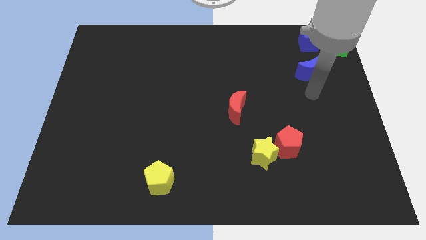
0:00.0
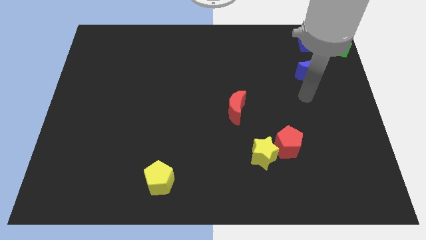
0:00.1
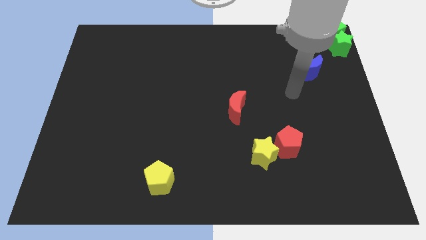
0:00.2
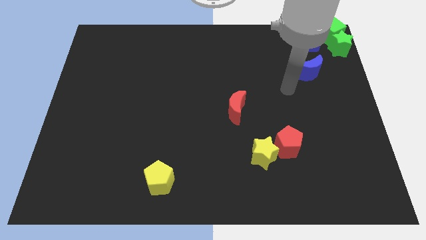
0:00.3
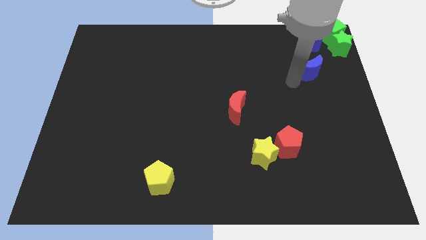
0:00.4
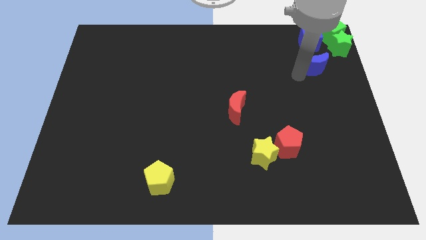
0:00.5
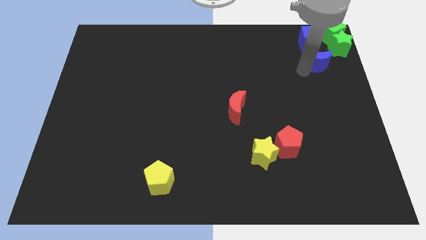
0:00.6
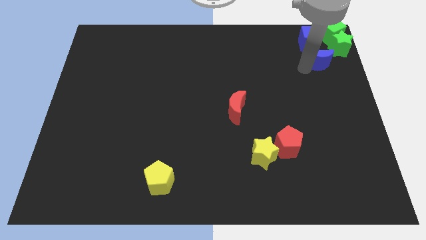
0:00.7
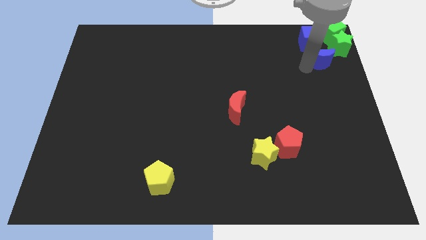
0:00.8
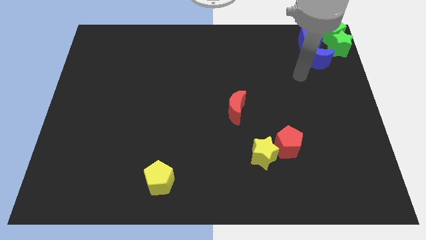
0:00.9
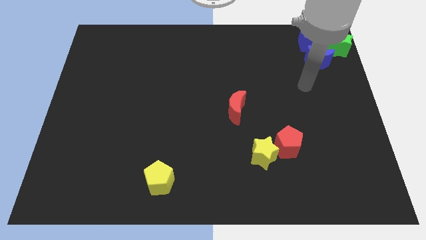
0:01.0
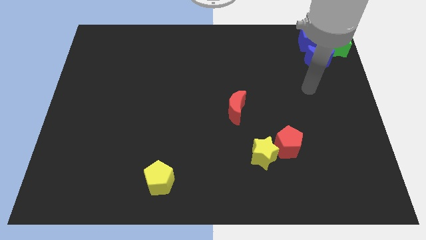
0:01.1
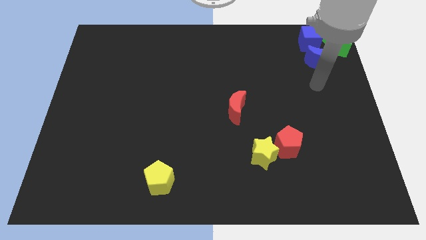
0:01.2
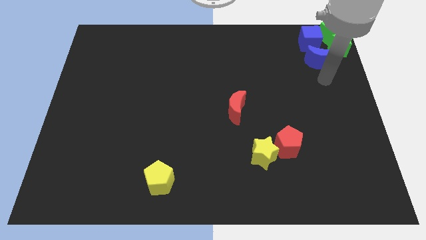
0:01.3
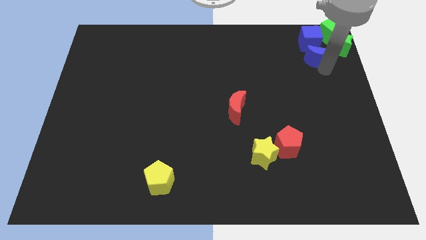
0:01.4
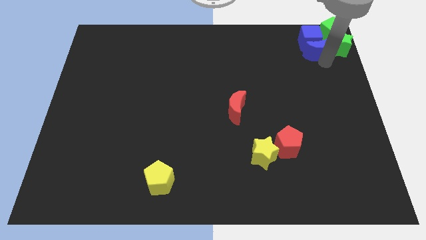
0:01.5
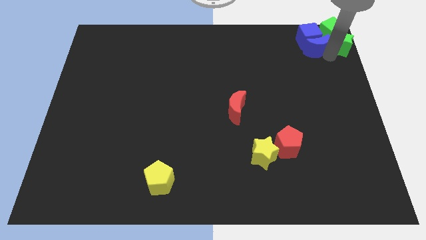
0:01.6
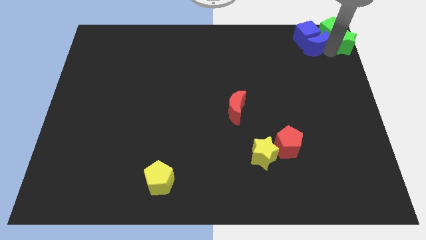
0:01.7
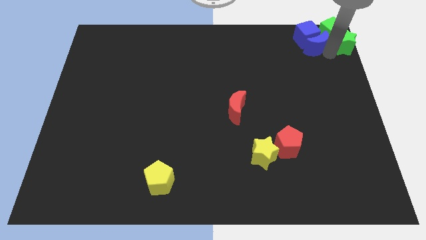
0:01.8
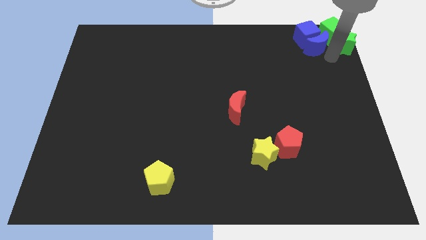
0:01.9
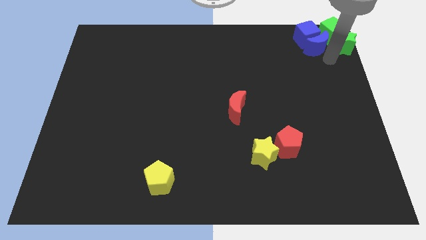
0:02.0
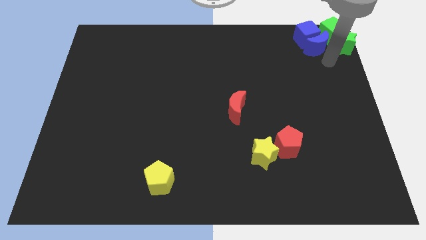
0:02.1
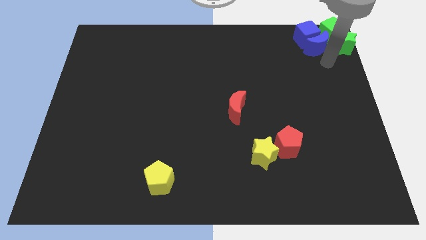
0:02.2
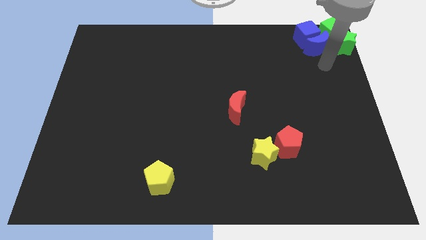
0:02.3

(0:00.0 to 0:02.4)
add the blue moon to the group of blocks at the top right corner of the board

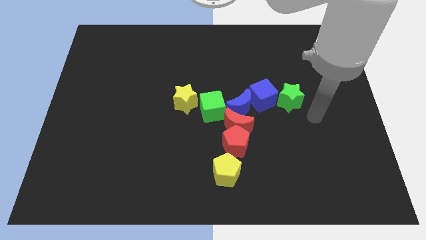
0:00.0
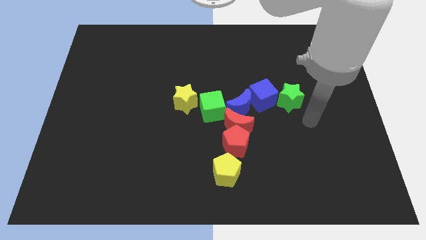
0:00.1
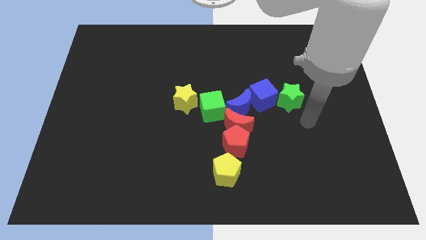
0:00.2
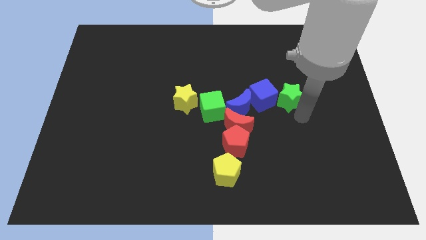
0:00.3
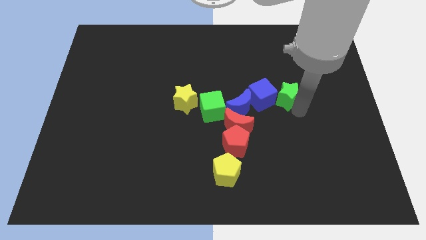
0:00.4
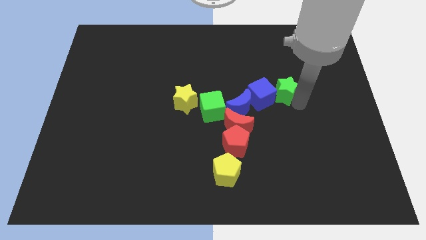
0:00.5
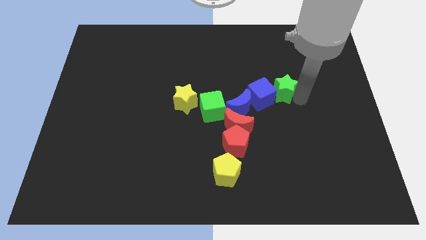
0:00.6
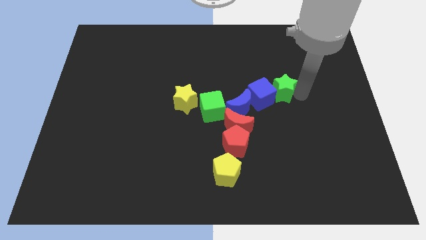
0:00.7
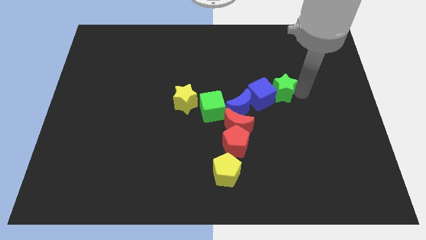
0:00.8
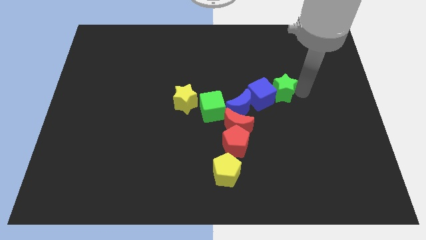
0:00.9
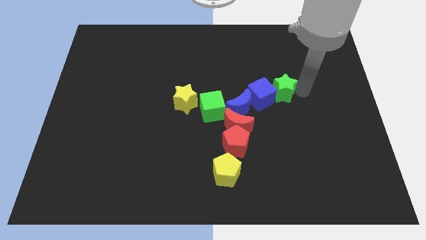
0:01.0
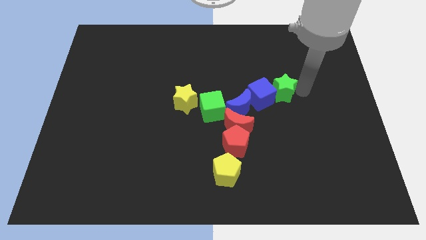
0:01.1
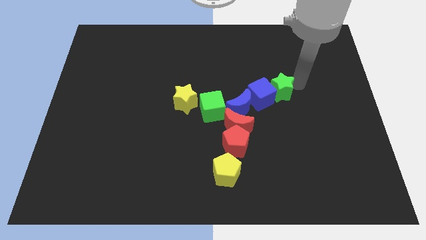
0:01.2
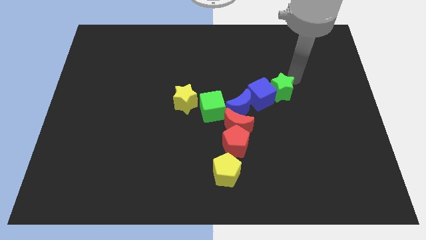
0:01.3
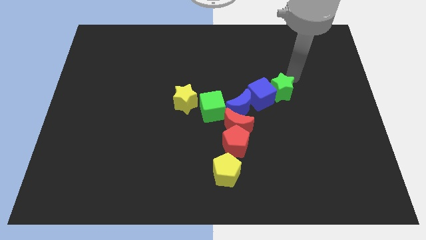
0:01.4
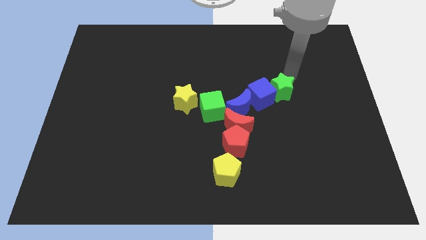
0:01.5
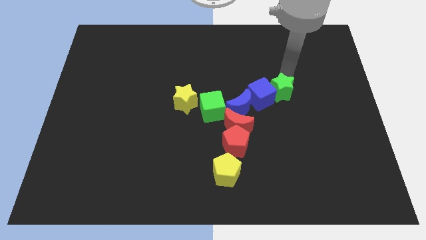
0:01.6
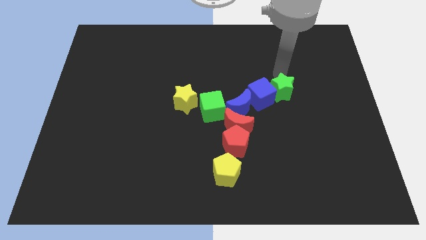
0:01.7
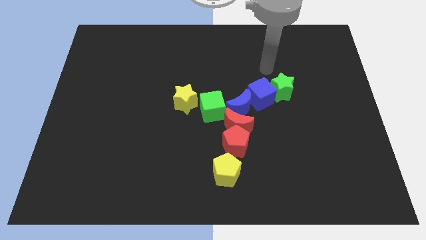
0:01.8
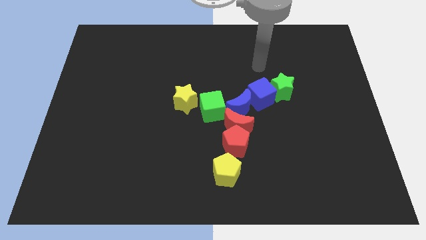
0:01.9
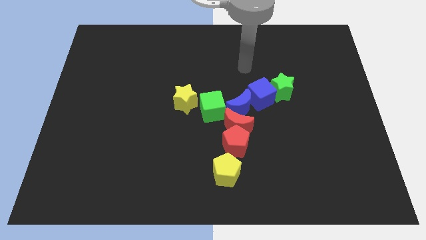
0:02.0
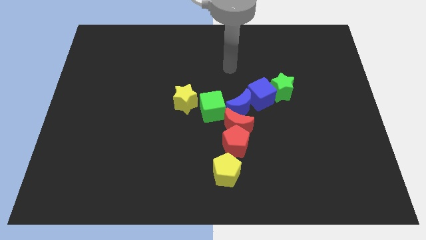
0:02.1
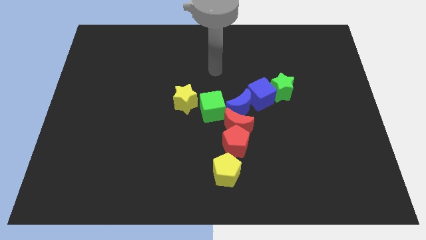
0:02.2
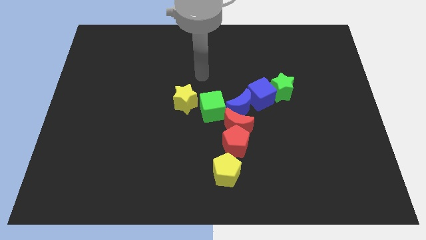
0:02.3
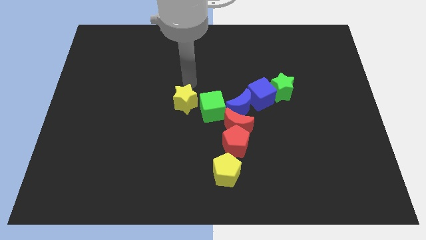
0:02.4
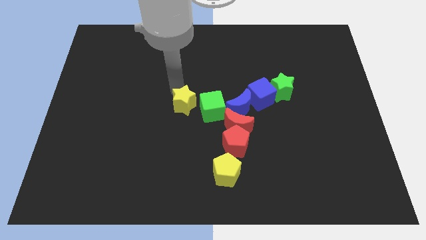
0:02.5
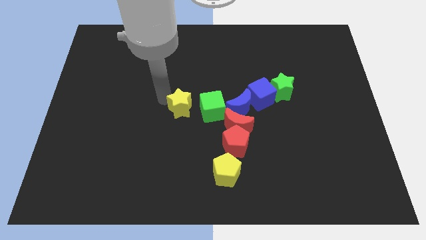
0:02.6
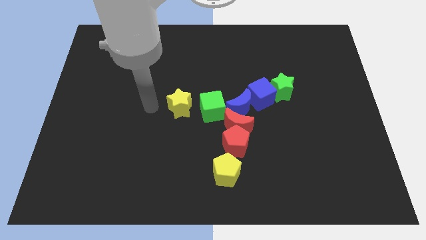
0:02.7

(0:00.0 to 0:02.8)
place your arm above the yellow star

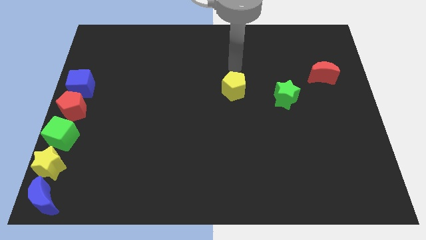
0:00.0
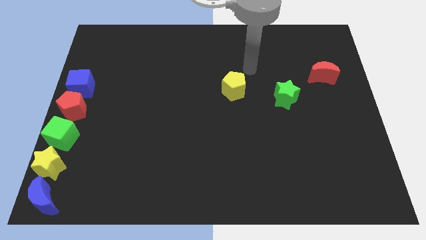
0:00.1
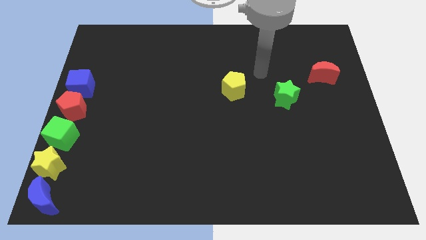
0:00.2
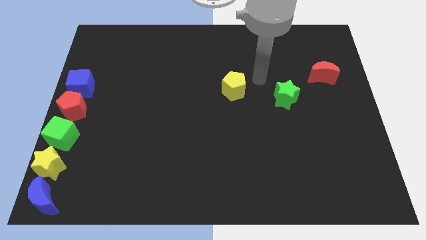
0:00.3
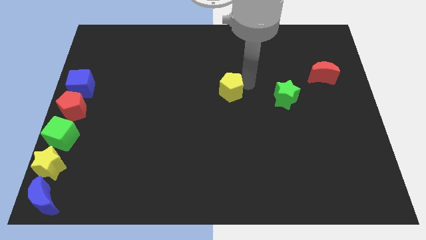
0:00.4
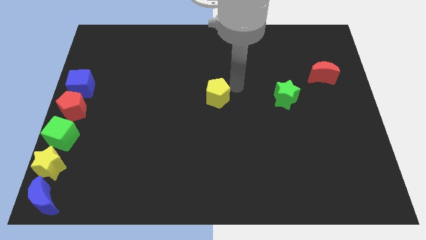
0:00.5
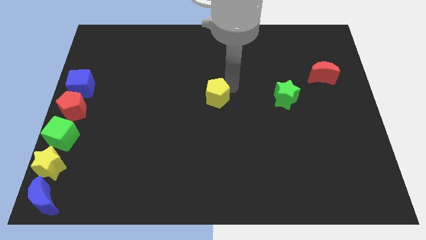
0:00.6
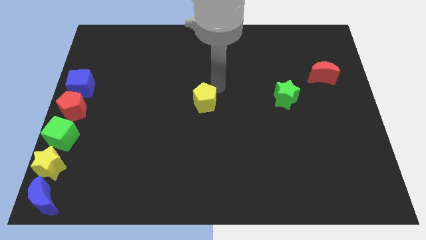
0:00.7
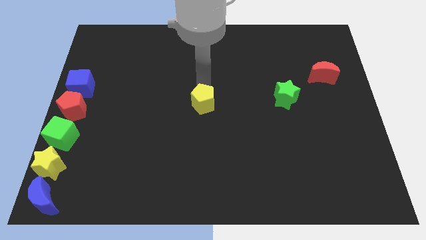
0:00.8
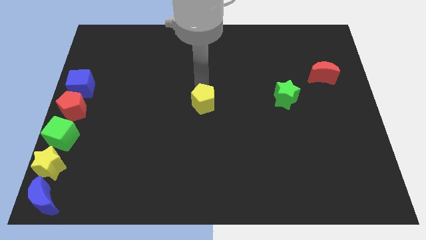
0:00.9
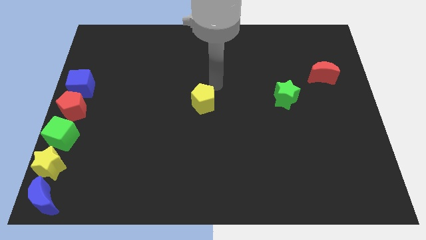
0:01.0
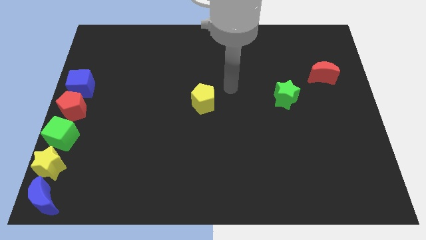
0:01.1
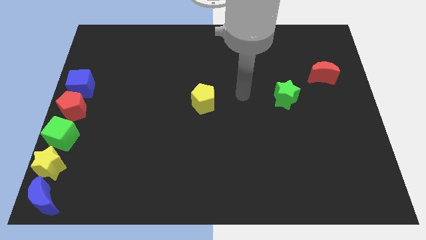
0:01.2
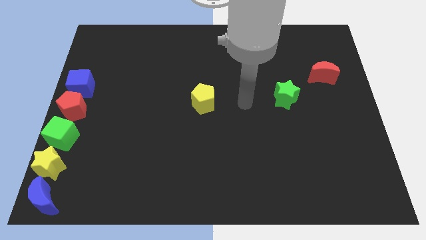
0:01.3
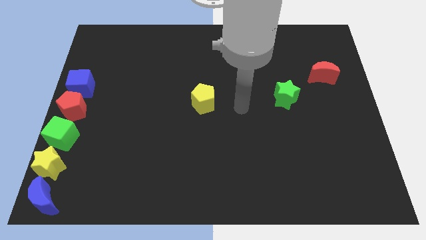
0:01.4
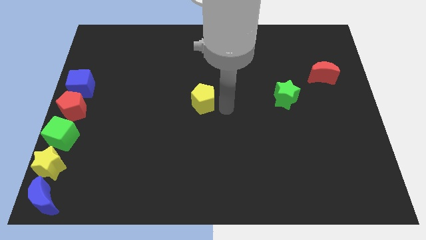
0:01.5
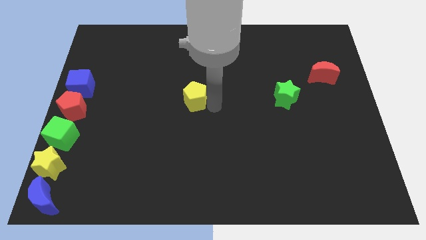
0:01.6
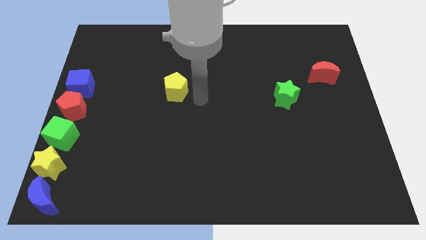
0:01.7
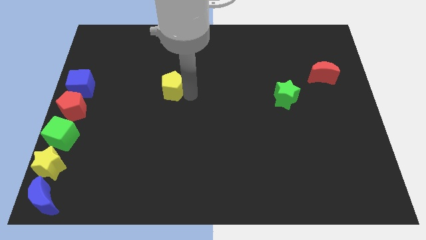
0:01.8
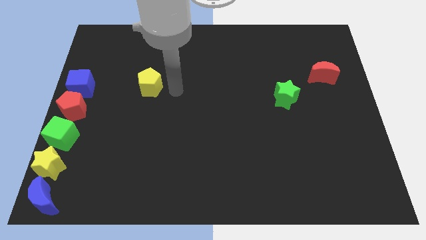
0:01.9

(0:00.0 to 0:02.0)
push the yellow pentagon towards the left side of the board

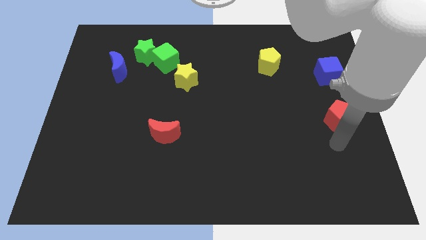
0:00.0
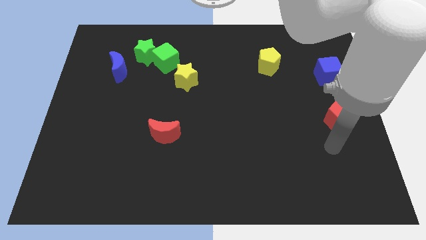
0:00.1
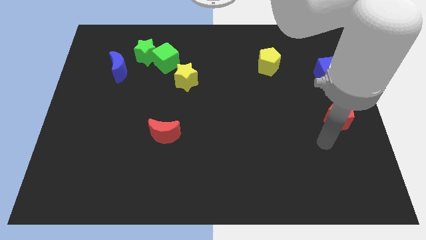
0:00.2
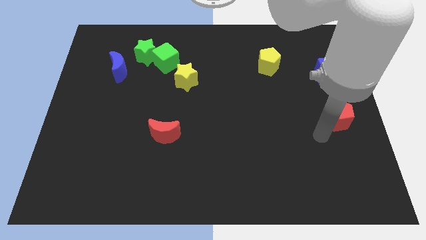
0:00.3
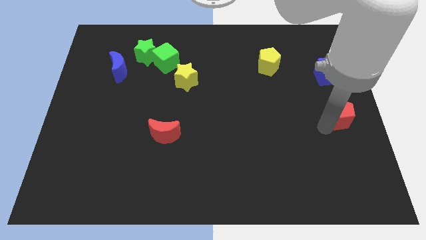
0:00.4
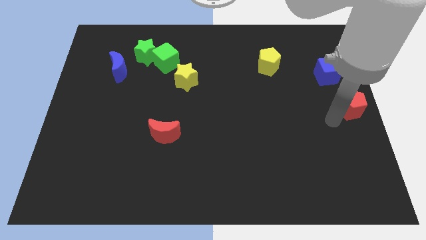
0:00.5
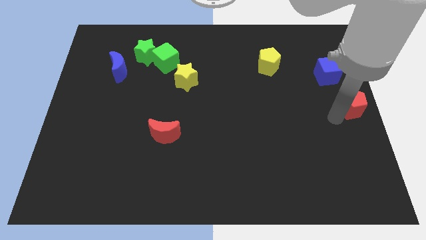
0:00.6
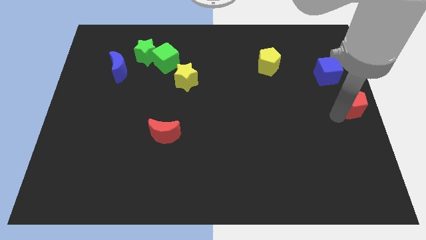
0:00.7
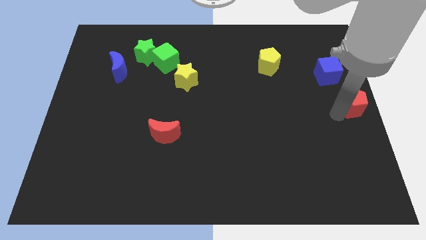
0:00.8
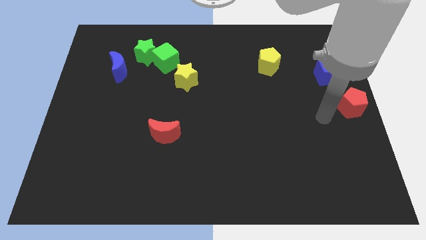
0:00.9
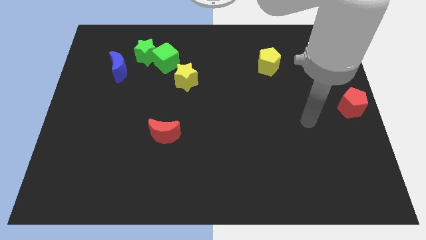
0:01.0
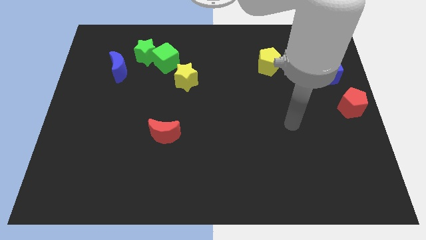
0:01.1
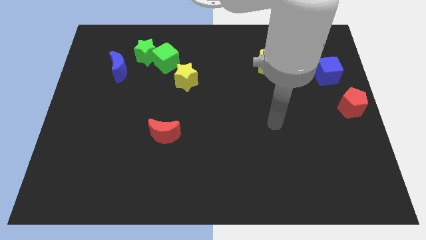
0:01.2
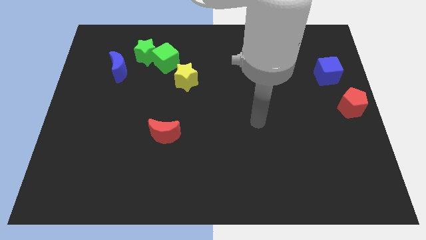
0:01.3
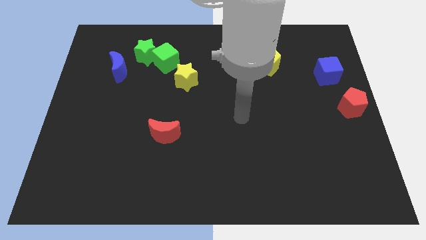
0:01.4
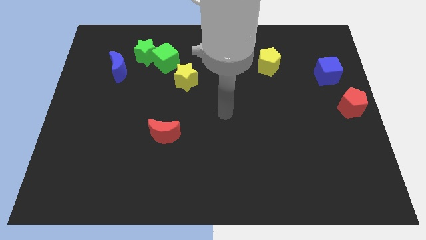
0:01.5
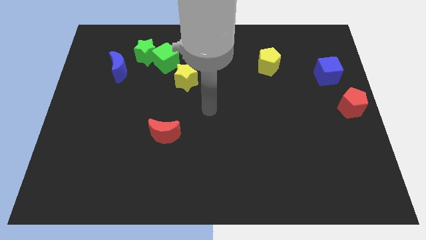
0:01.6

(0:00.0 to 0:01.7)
hit the red pentagon to the right side of the board
